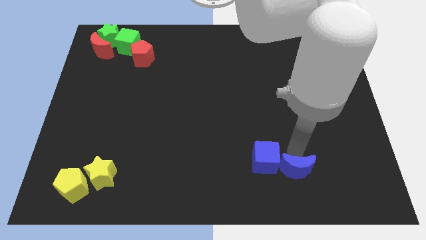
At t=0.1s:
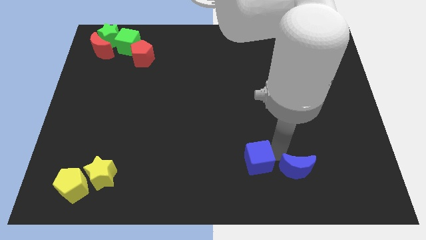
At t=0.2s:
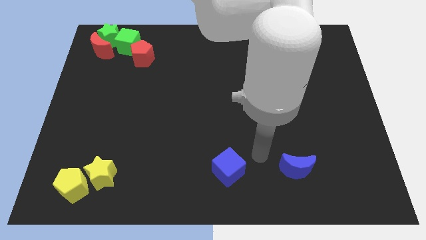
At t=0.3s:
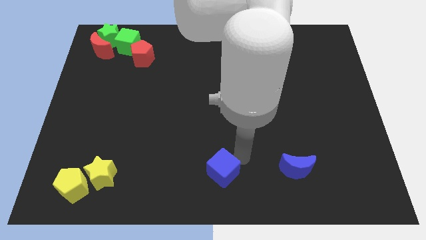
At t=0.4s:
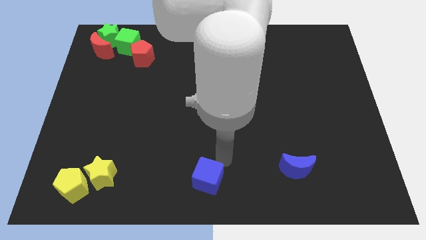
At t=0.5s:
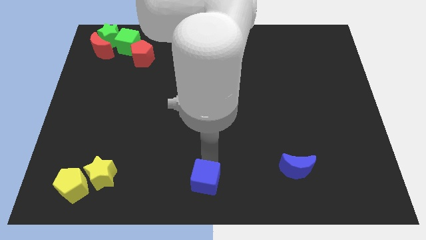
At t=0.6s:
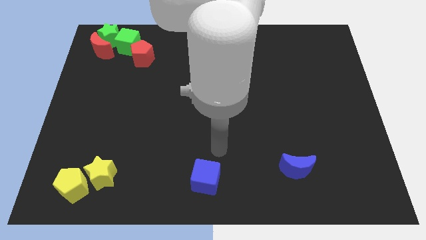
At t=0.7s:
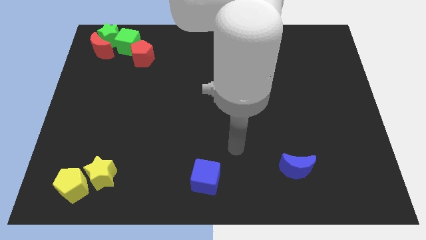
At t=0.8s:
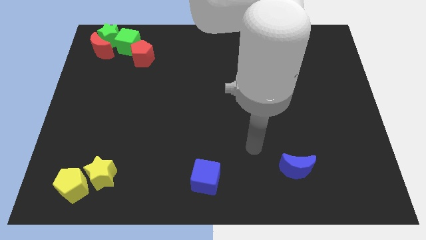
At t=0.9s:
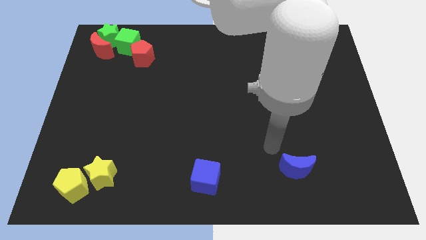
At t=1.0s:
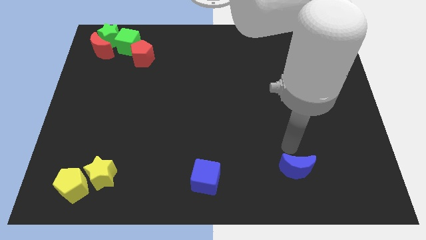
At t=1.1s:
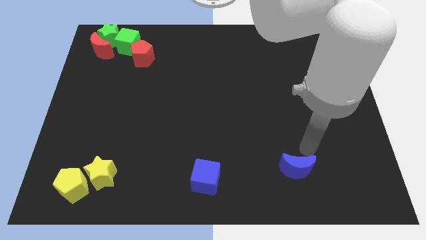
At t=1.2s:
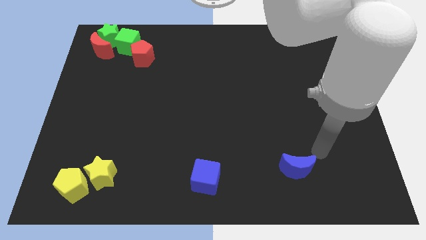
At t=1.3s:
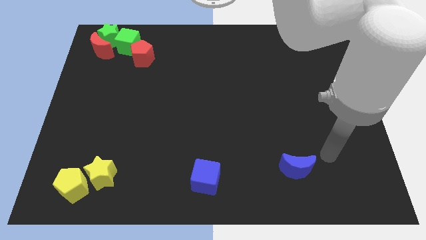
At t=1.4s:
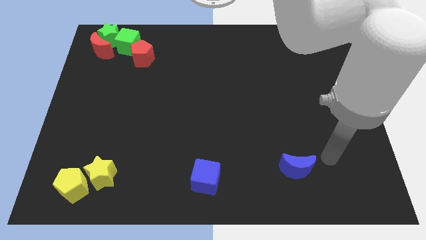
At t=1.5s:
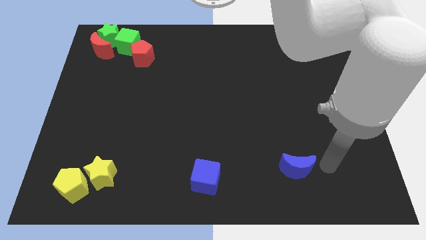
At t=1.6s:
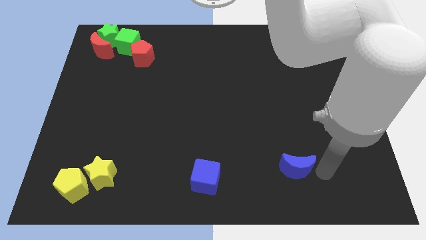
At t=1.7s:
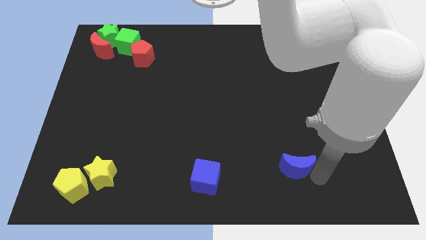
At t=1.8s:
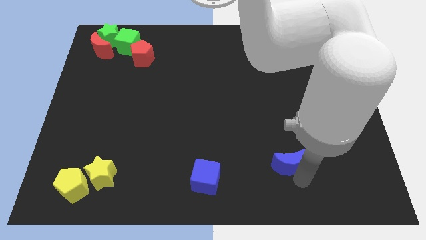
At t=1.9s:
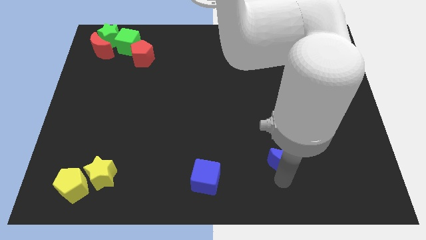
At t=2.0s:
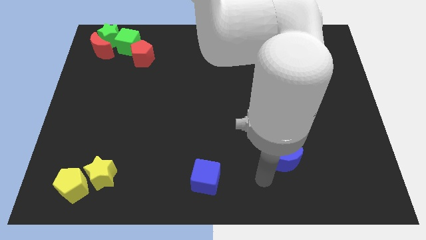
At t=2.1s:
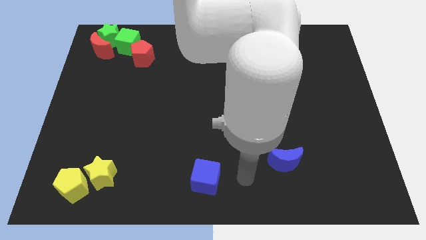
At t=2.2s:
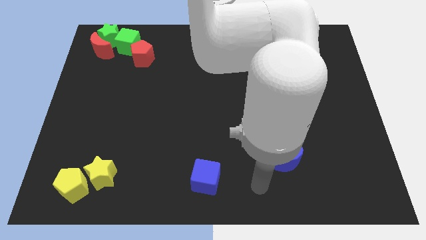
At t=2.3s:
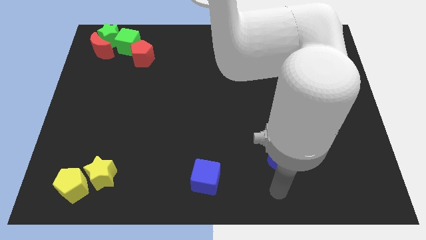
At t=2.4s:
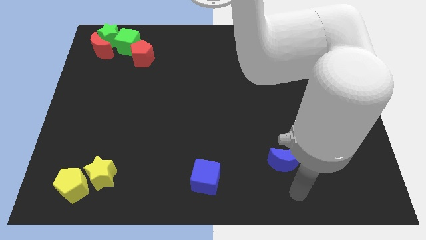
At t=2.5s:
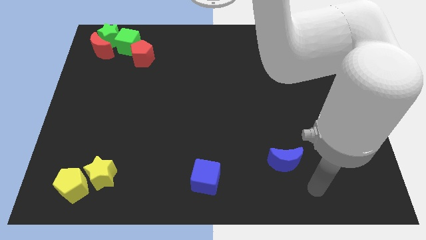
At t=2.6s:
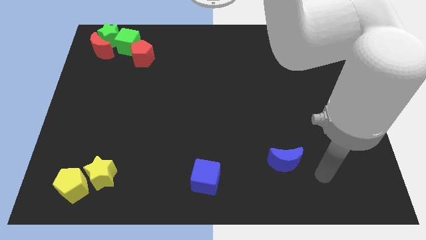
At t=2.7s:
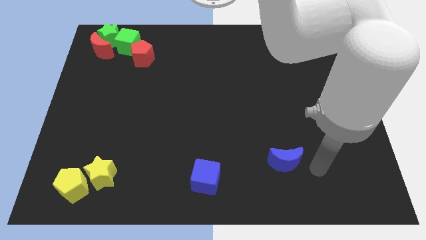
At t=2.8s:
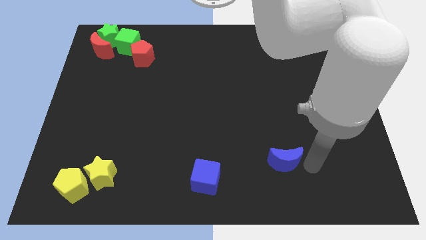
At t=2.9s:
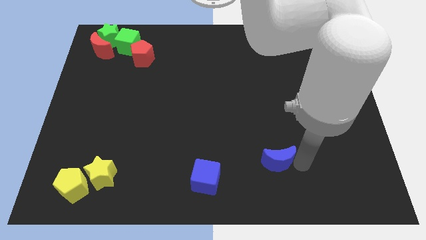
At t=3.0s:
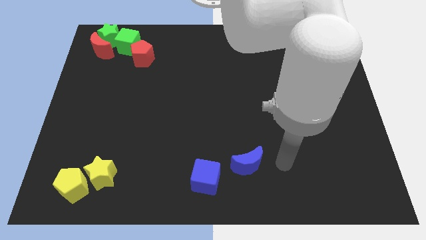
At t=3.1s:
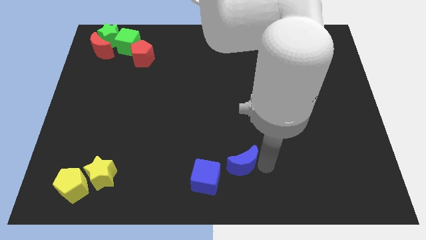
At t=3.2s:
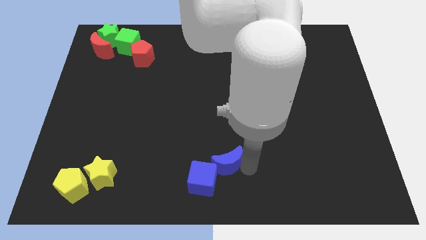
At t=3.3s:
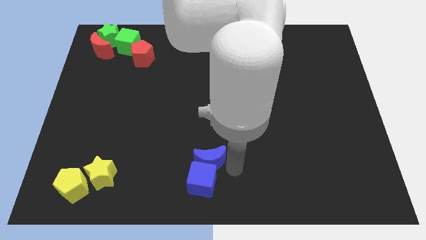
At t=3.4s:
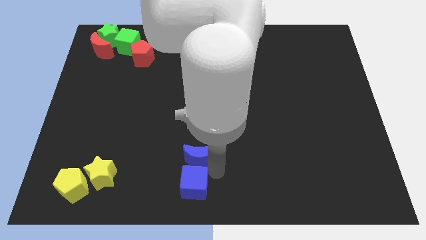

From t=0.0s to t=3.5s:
move the blue moon to the top side of the blue cube

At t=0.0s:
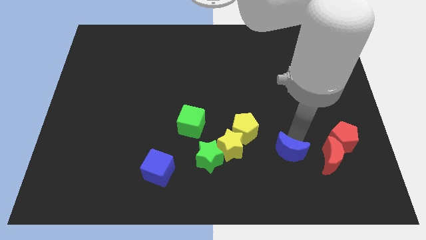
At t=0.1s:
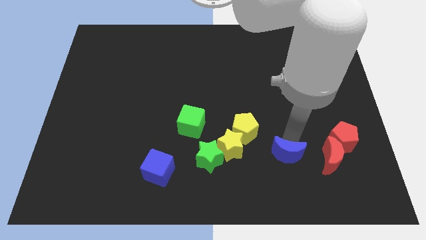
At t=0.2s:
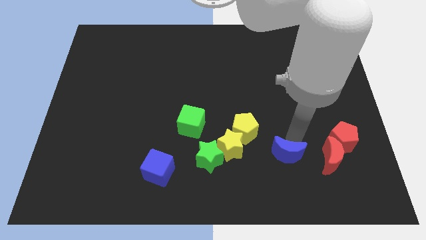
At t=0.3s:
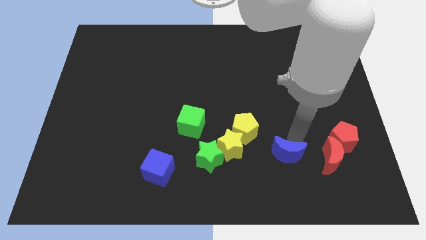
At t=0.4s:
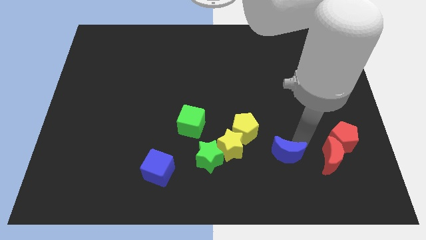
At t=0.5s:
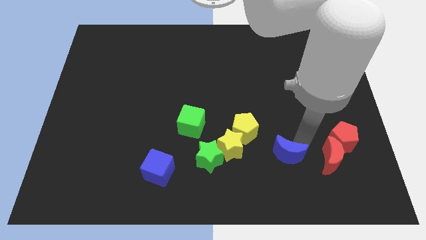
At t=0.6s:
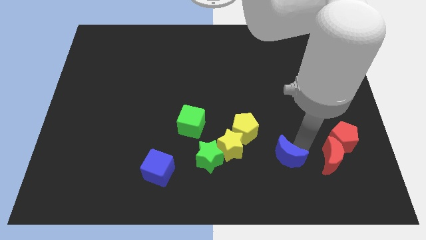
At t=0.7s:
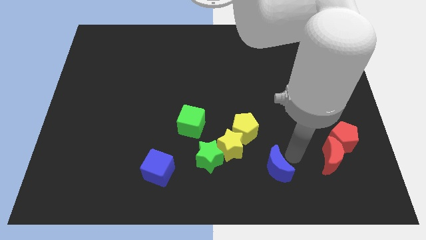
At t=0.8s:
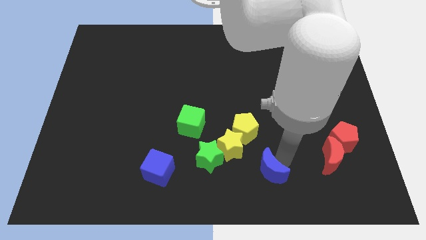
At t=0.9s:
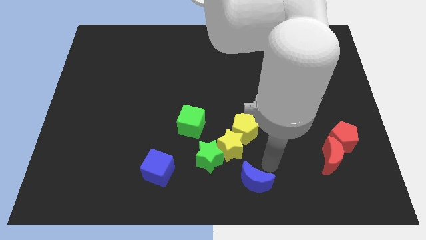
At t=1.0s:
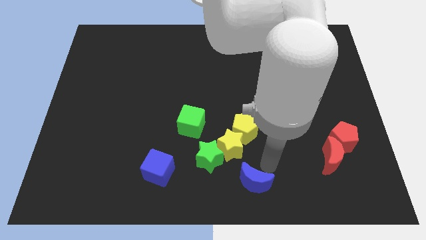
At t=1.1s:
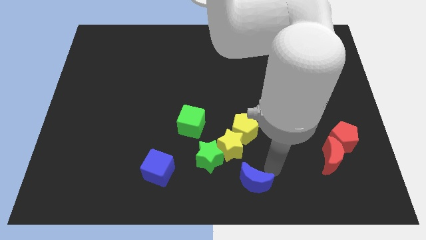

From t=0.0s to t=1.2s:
place the blue moon diagonally bottom right to the yellow star

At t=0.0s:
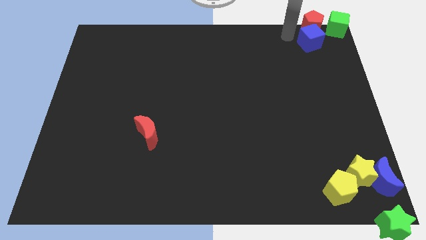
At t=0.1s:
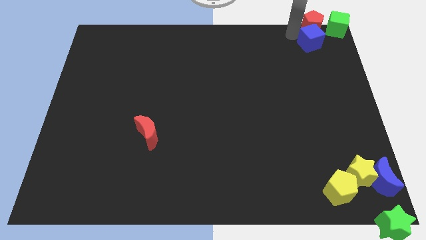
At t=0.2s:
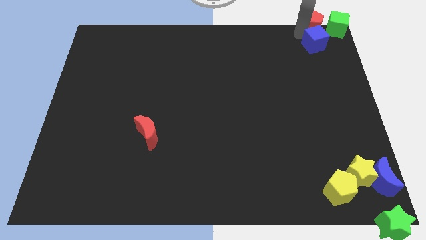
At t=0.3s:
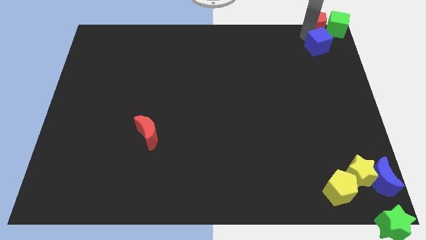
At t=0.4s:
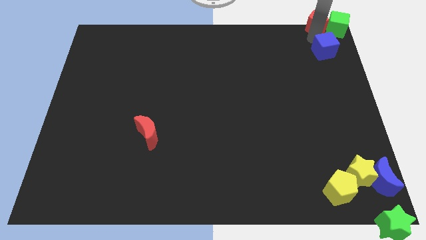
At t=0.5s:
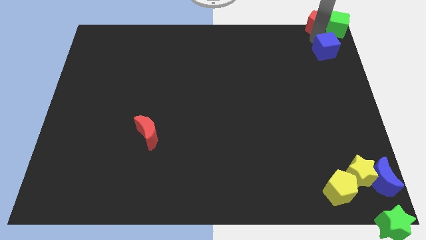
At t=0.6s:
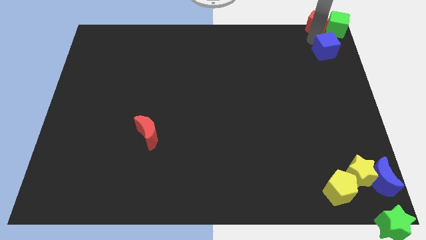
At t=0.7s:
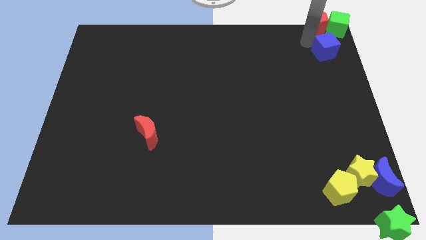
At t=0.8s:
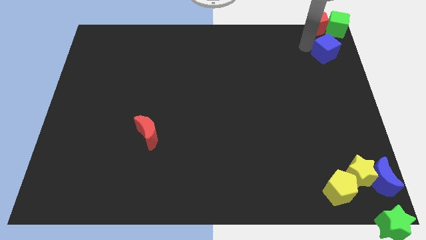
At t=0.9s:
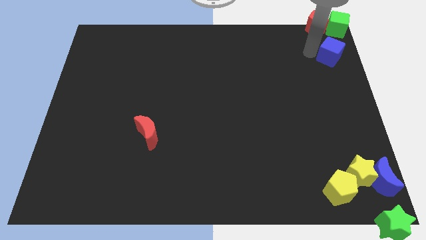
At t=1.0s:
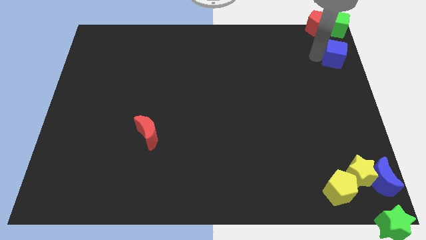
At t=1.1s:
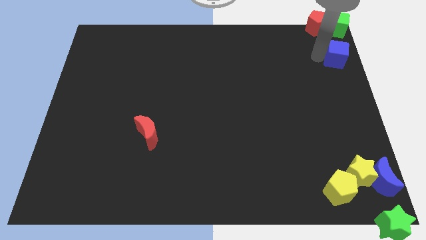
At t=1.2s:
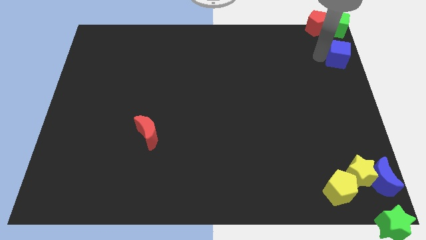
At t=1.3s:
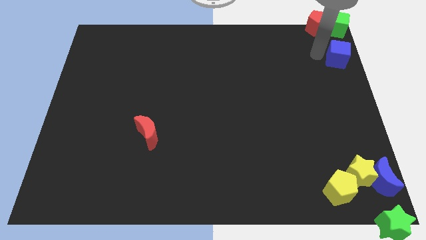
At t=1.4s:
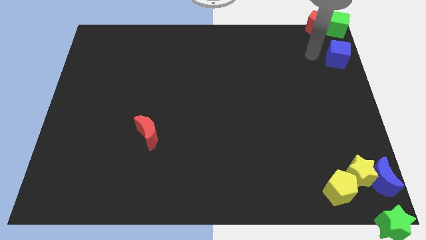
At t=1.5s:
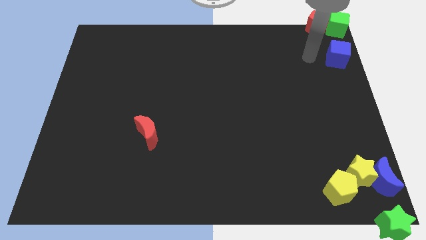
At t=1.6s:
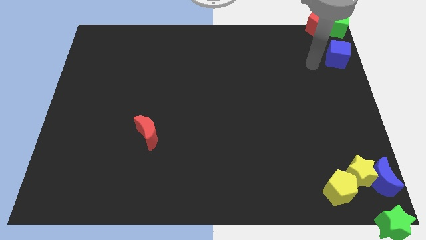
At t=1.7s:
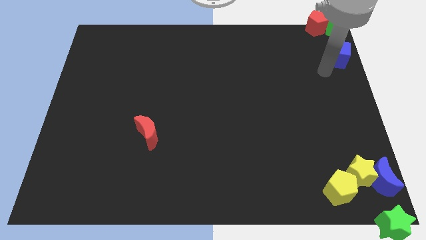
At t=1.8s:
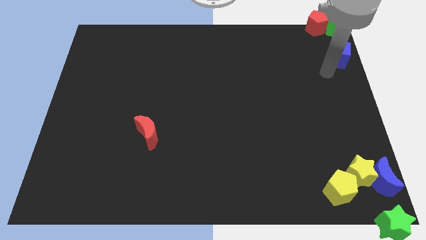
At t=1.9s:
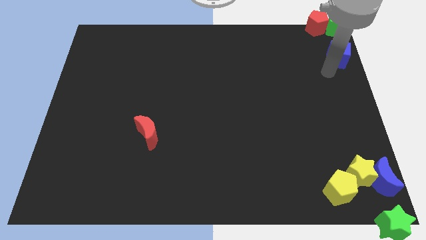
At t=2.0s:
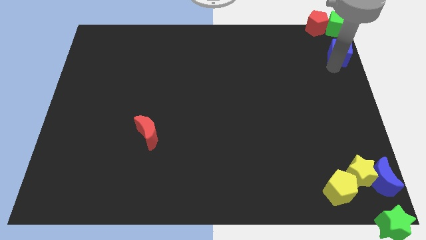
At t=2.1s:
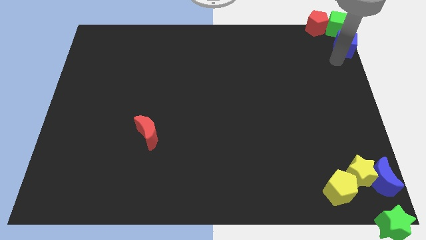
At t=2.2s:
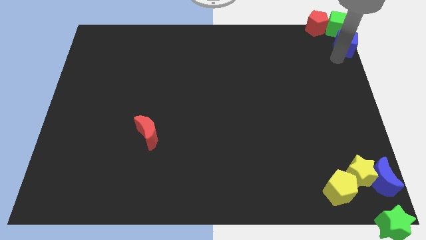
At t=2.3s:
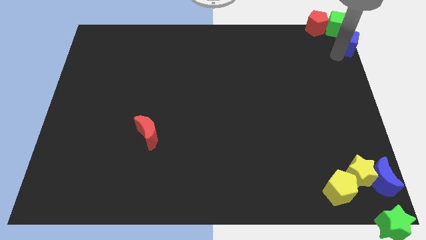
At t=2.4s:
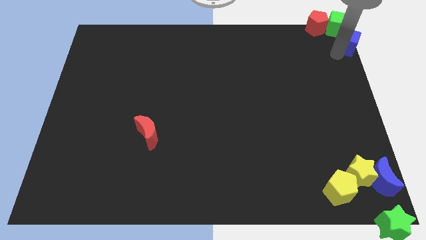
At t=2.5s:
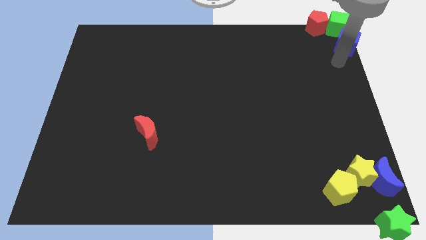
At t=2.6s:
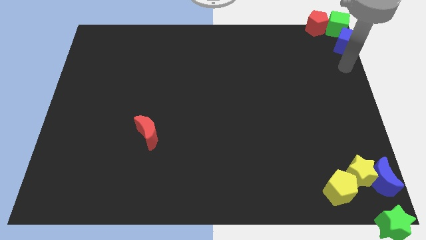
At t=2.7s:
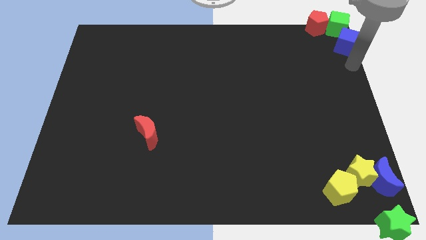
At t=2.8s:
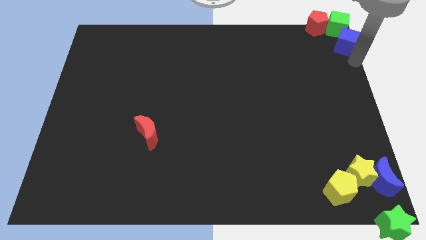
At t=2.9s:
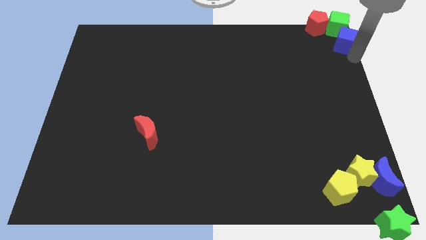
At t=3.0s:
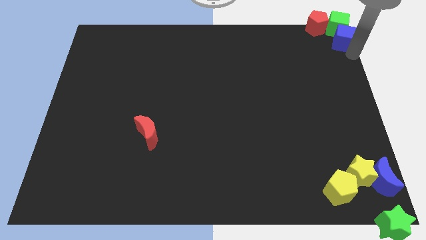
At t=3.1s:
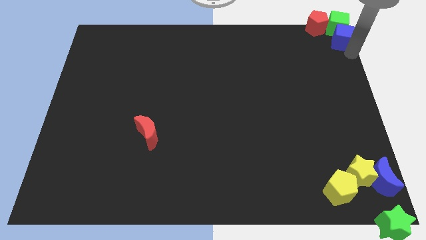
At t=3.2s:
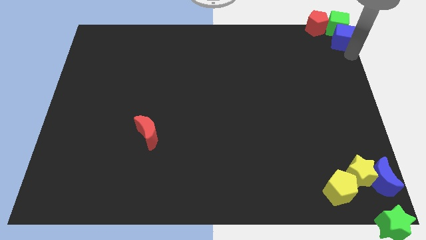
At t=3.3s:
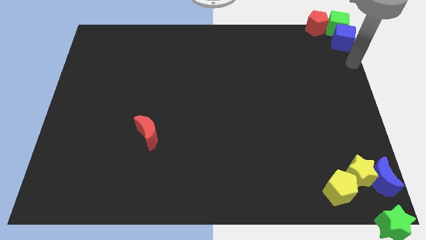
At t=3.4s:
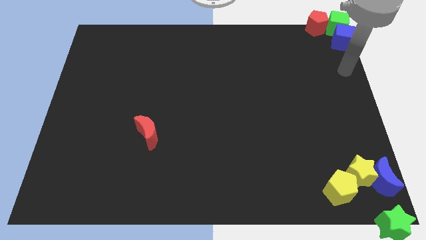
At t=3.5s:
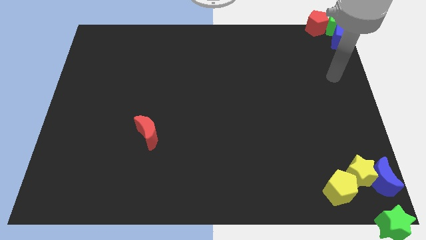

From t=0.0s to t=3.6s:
move the blue cube into the green cube

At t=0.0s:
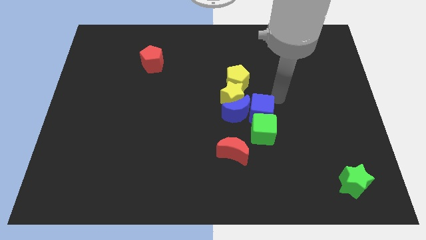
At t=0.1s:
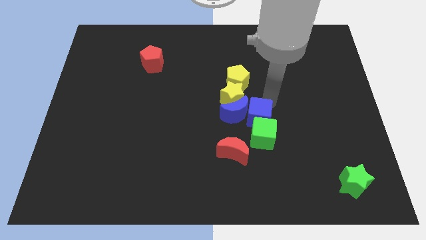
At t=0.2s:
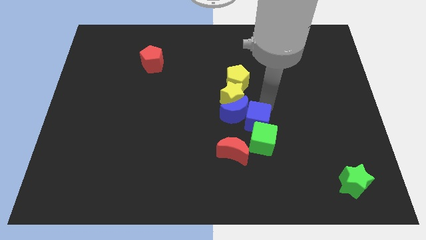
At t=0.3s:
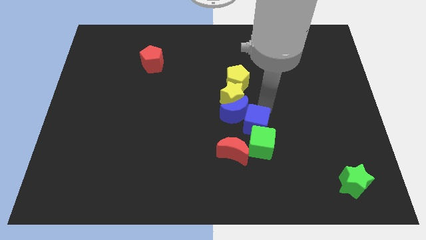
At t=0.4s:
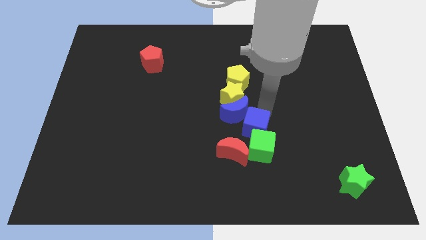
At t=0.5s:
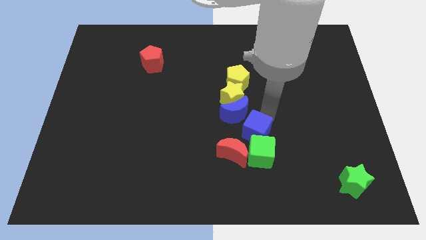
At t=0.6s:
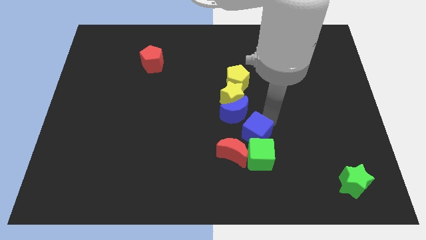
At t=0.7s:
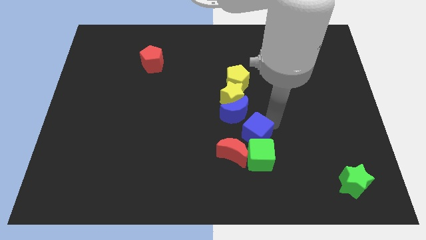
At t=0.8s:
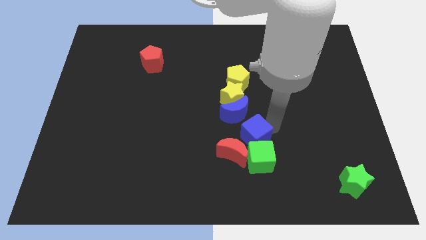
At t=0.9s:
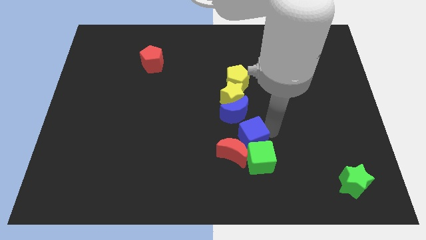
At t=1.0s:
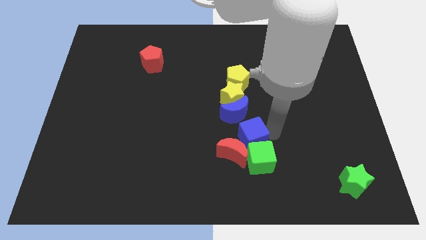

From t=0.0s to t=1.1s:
move blue cube into the green cube
